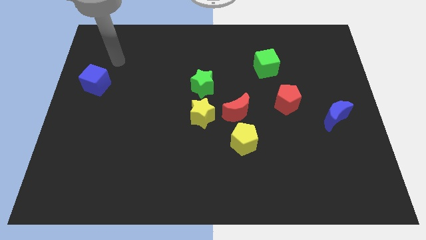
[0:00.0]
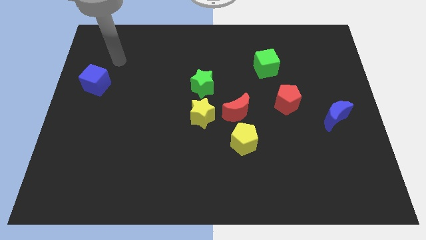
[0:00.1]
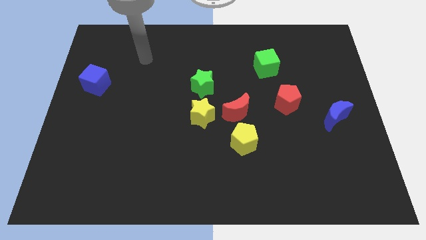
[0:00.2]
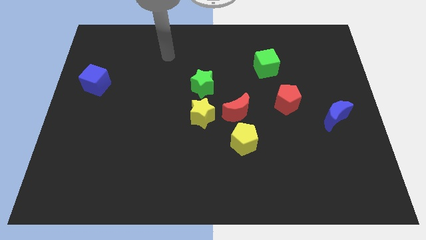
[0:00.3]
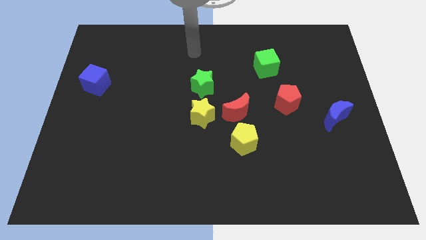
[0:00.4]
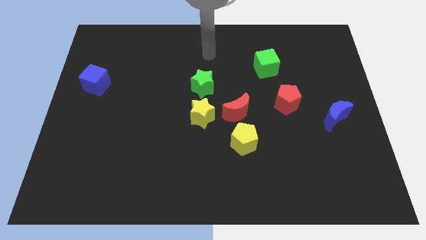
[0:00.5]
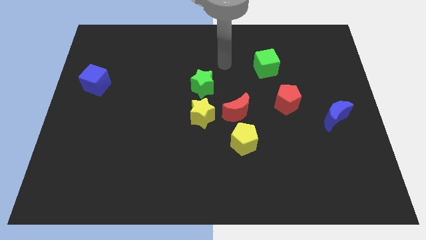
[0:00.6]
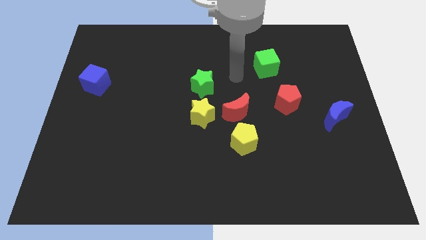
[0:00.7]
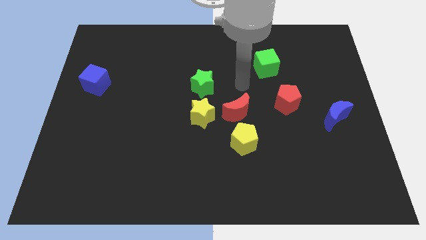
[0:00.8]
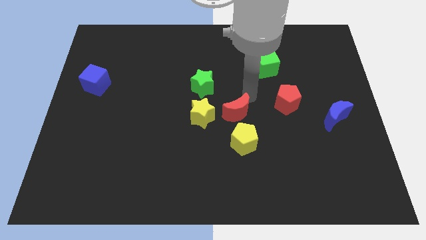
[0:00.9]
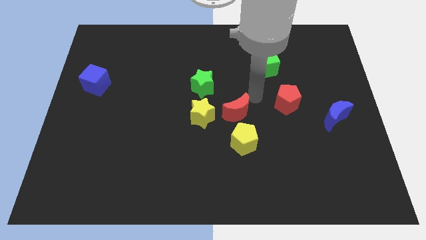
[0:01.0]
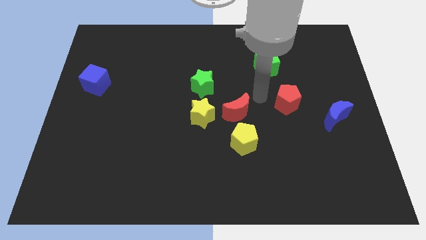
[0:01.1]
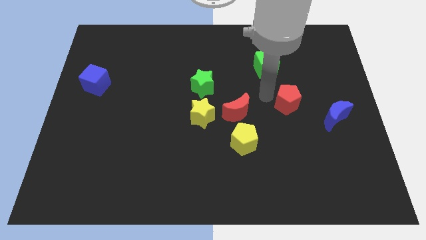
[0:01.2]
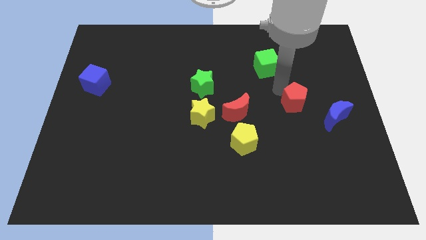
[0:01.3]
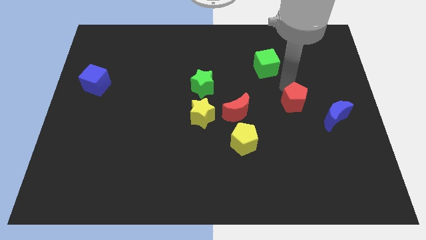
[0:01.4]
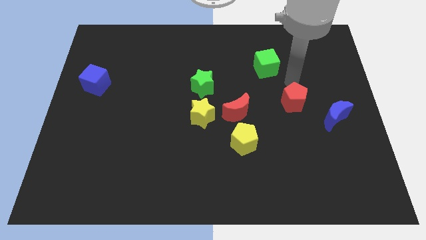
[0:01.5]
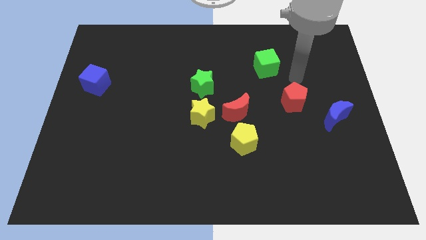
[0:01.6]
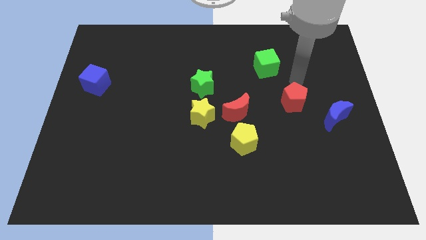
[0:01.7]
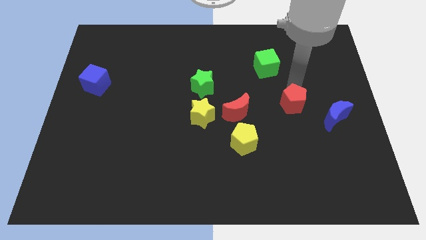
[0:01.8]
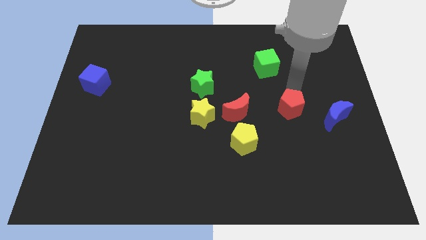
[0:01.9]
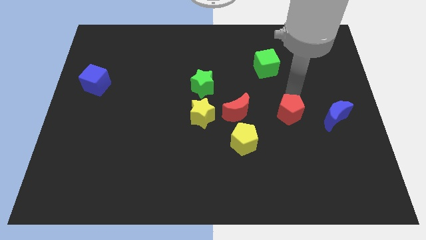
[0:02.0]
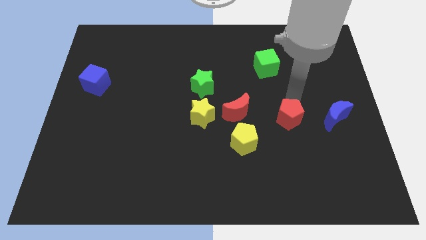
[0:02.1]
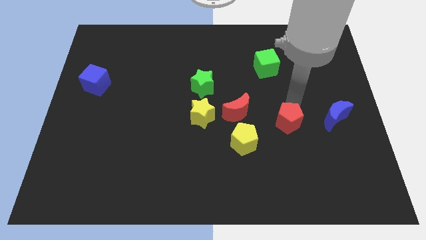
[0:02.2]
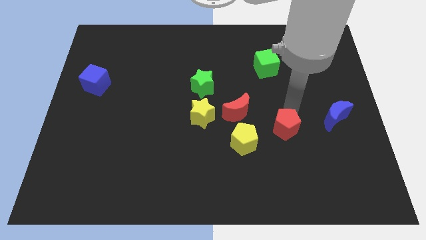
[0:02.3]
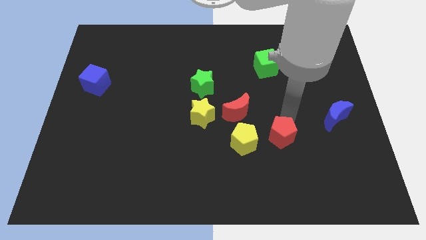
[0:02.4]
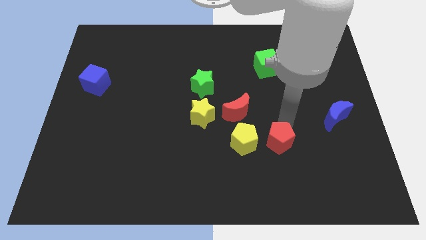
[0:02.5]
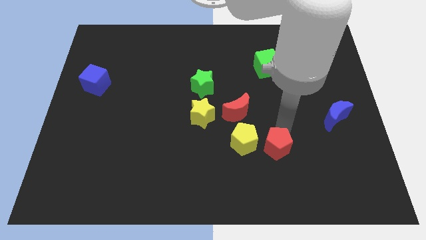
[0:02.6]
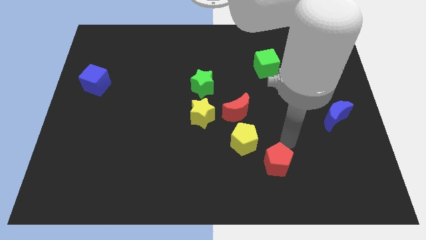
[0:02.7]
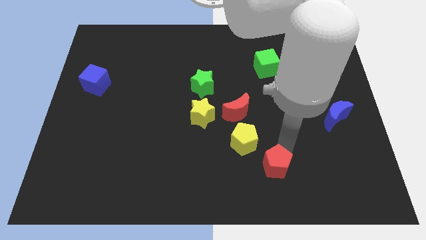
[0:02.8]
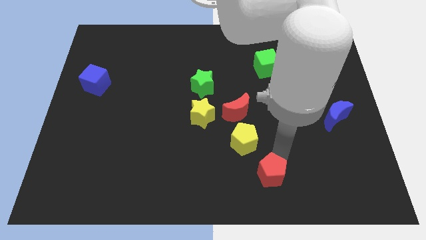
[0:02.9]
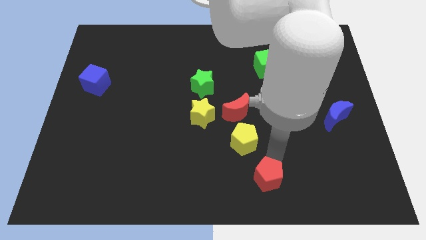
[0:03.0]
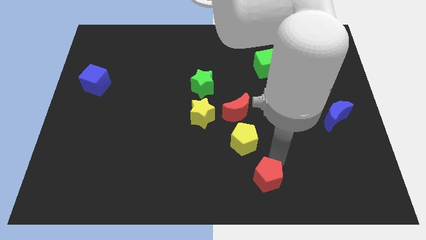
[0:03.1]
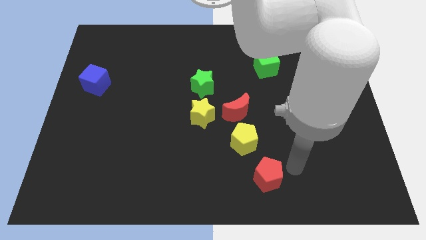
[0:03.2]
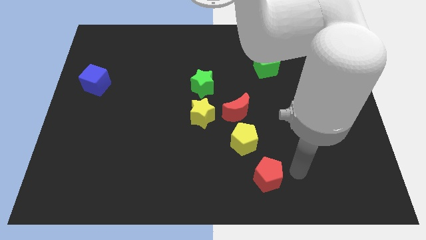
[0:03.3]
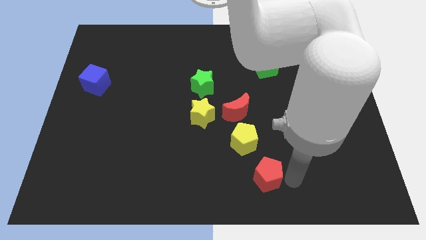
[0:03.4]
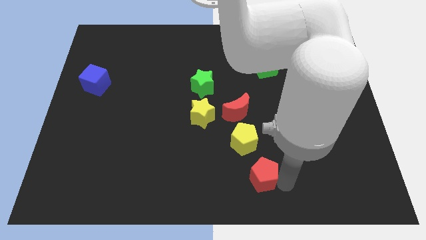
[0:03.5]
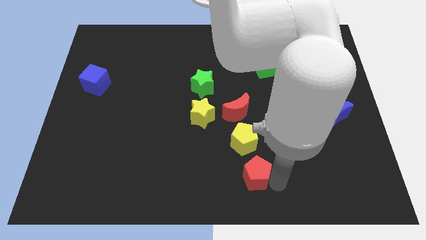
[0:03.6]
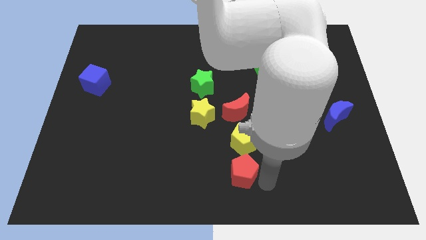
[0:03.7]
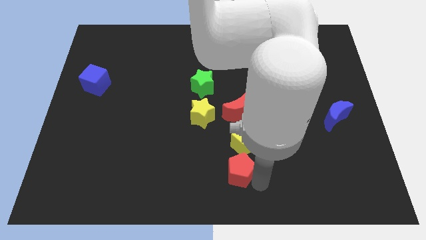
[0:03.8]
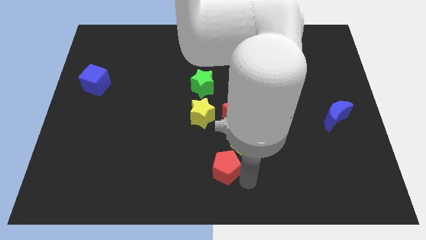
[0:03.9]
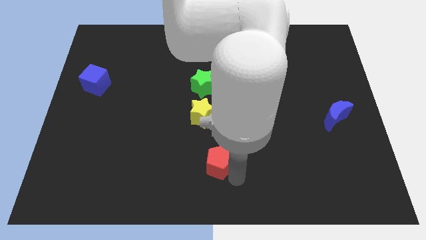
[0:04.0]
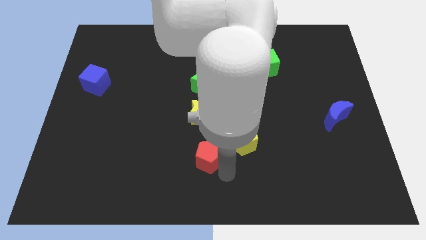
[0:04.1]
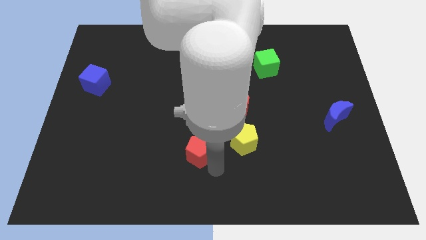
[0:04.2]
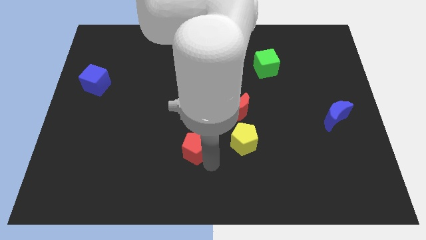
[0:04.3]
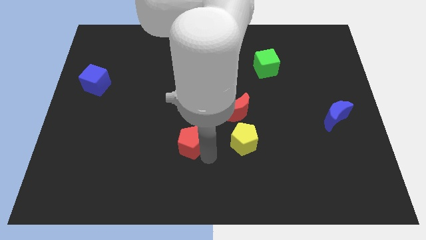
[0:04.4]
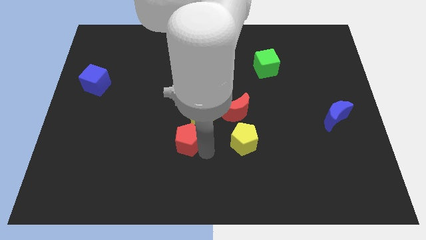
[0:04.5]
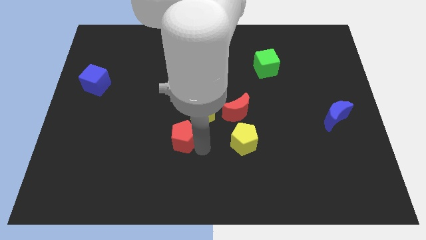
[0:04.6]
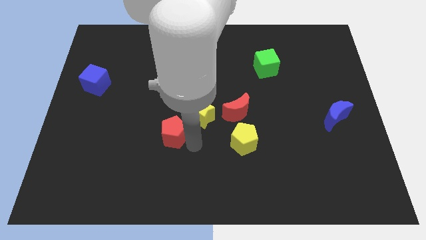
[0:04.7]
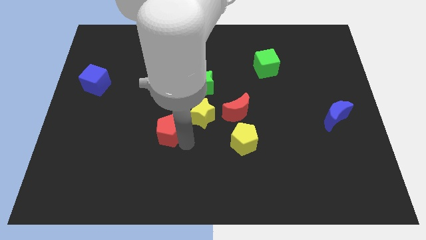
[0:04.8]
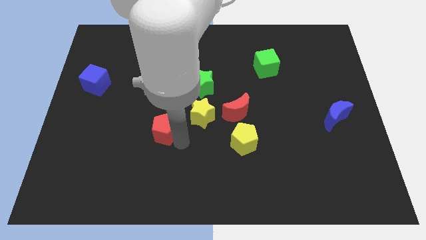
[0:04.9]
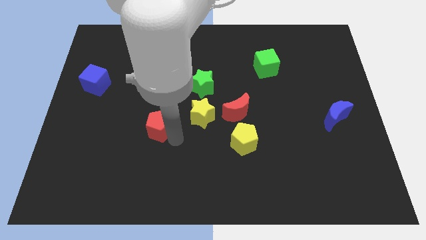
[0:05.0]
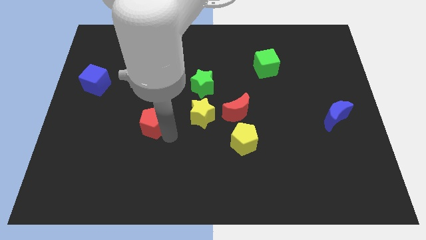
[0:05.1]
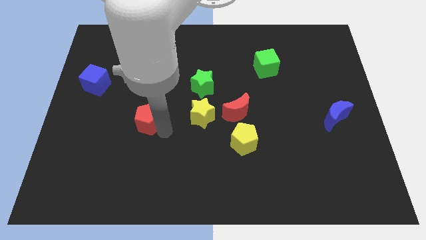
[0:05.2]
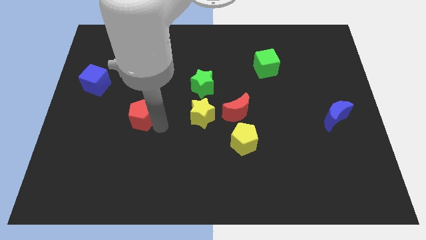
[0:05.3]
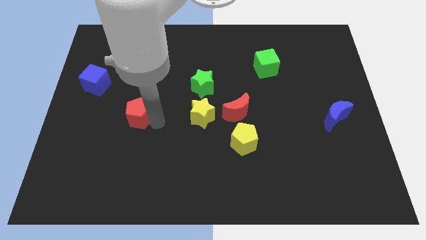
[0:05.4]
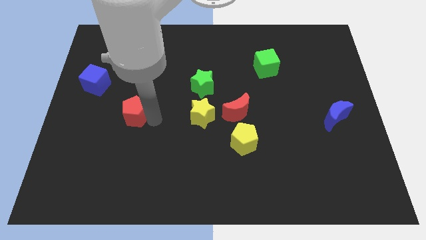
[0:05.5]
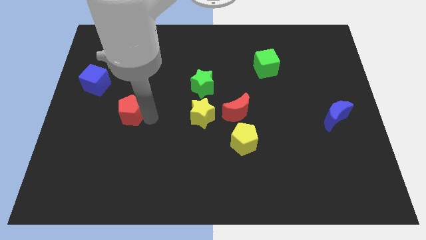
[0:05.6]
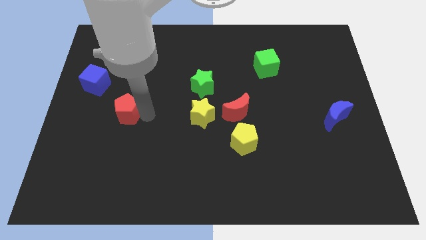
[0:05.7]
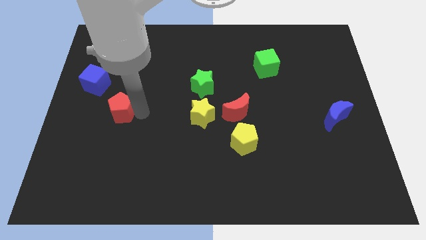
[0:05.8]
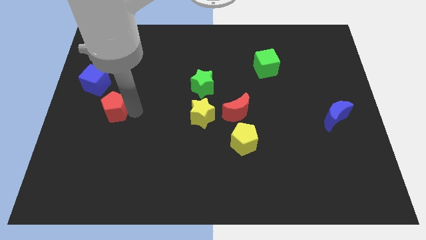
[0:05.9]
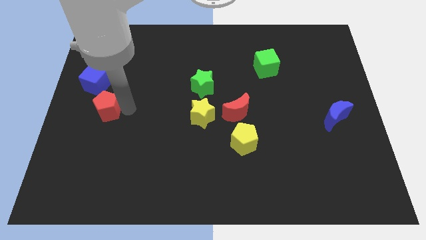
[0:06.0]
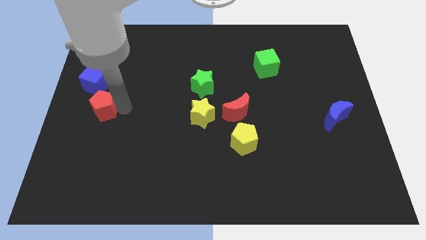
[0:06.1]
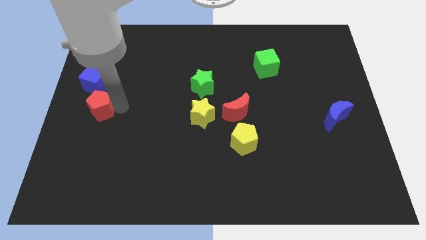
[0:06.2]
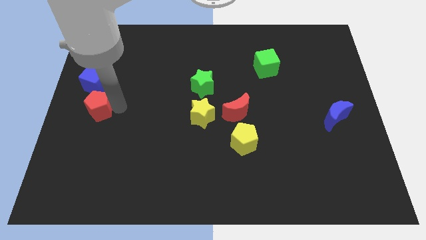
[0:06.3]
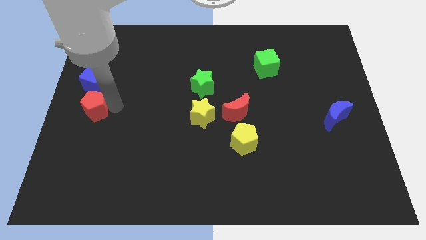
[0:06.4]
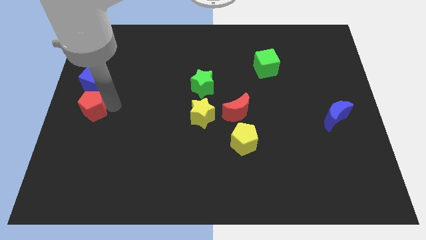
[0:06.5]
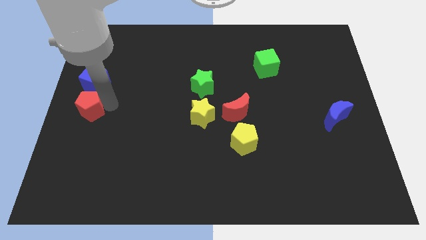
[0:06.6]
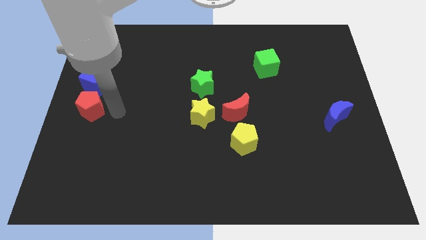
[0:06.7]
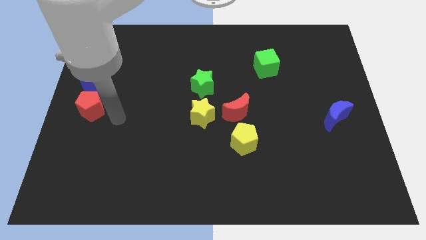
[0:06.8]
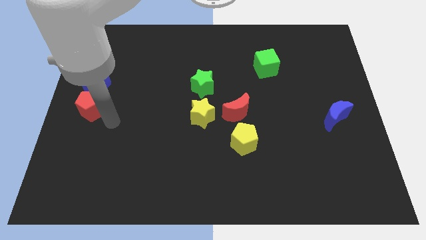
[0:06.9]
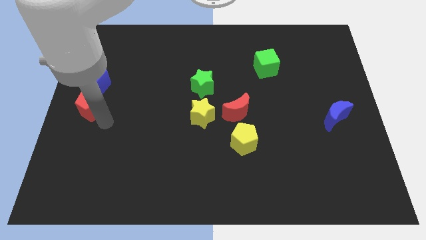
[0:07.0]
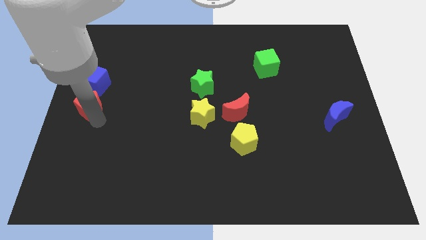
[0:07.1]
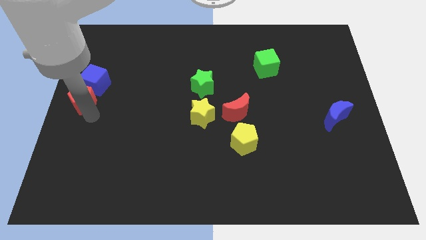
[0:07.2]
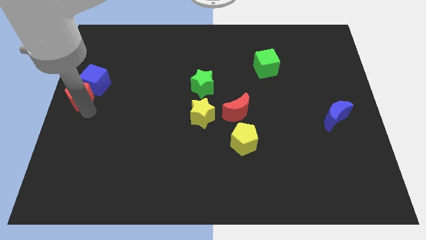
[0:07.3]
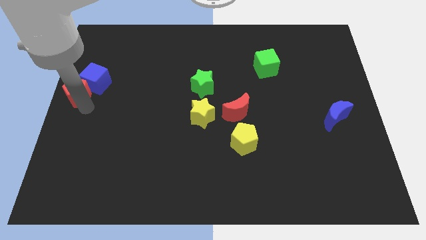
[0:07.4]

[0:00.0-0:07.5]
put the red pentagon to the blue cube

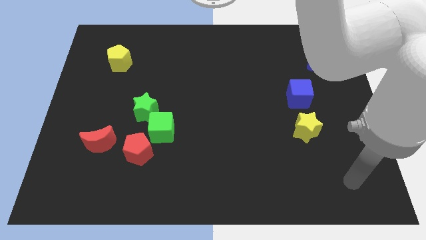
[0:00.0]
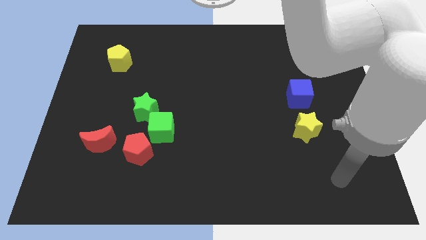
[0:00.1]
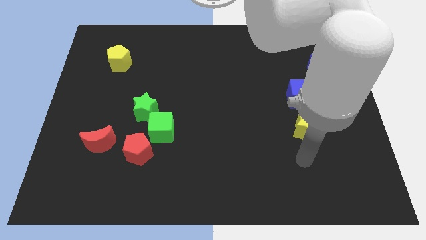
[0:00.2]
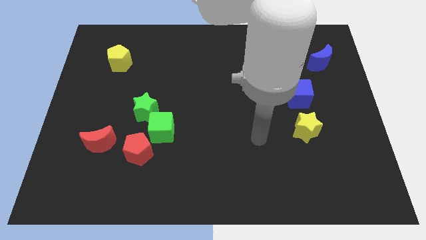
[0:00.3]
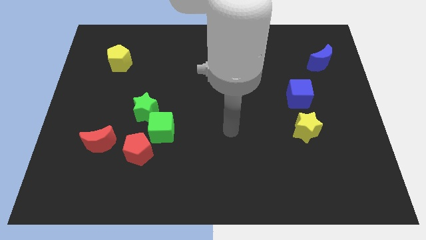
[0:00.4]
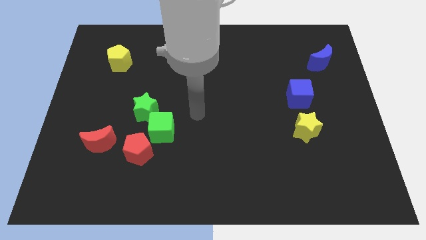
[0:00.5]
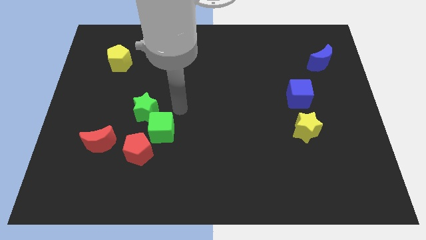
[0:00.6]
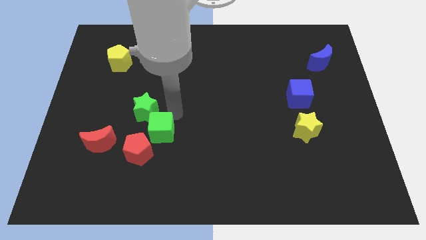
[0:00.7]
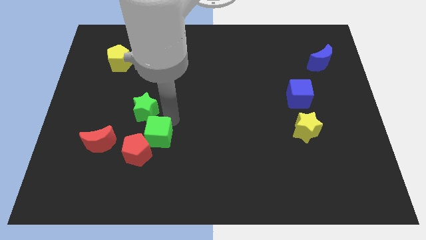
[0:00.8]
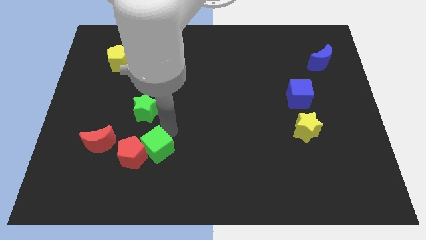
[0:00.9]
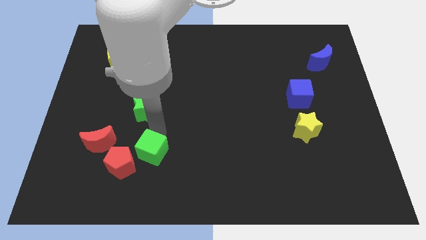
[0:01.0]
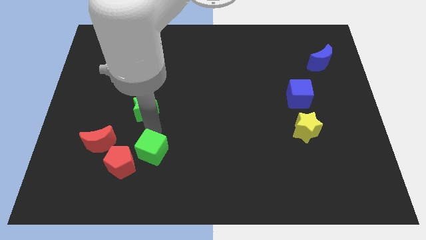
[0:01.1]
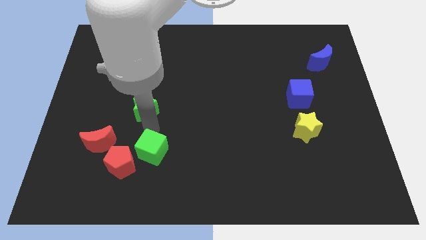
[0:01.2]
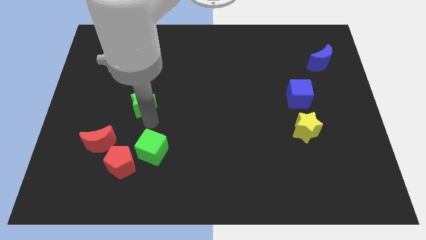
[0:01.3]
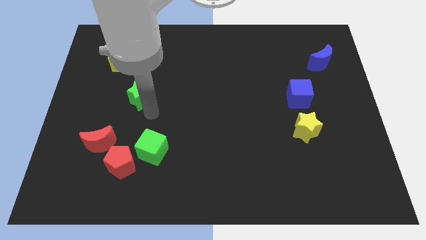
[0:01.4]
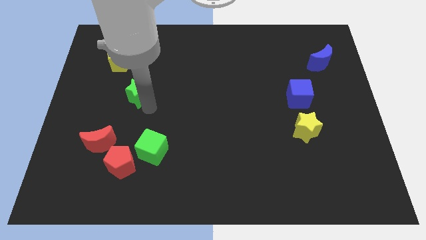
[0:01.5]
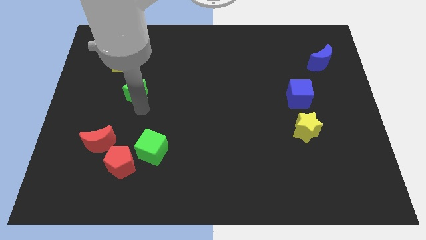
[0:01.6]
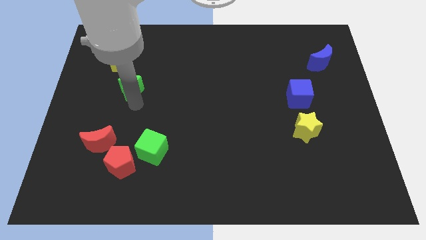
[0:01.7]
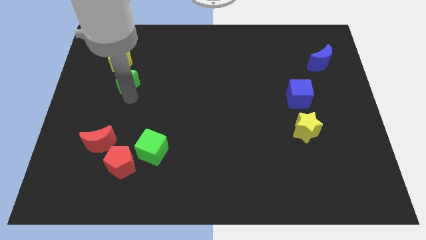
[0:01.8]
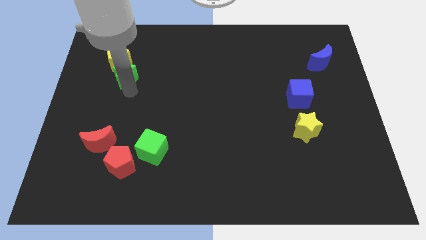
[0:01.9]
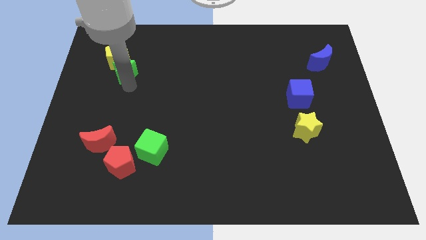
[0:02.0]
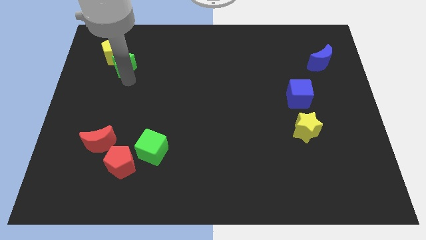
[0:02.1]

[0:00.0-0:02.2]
push the green star towards the yellow pentagon
